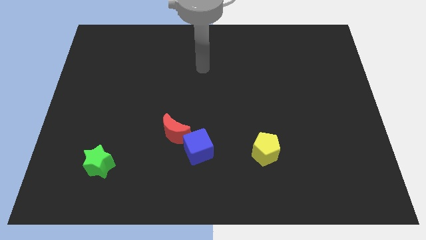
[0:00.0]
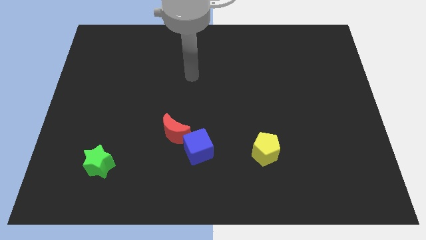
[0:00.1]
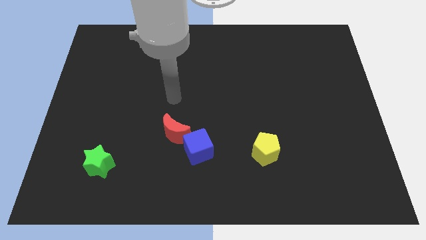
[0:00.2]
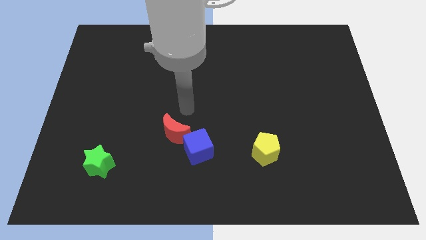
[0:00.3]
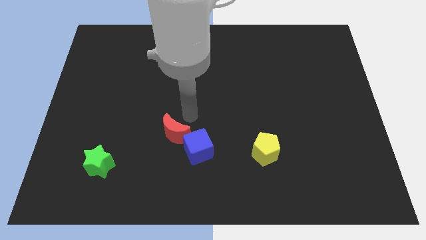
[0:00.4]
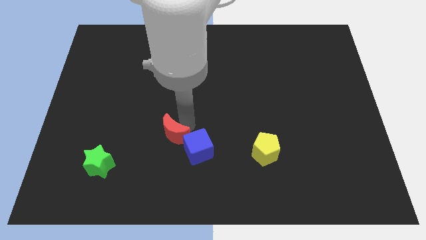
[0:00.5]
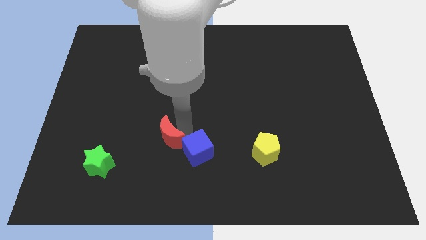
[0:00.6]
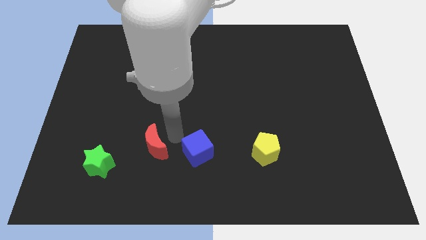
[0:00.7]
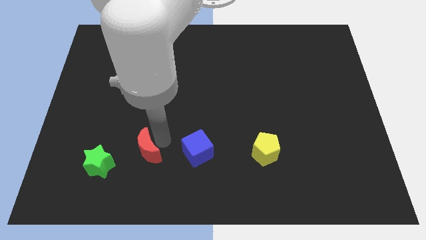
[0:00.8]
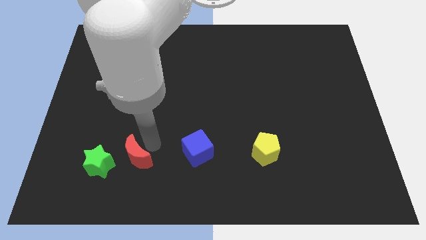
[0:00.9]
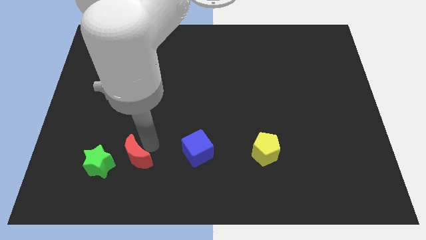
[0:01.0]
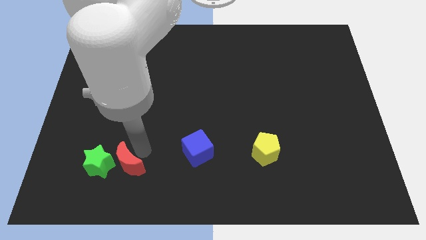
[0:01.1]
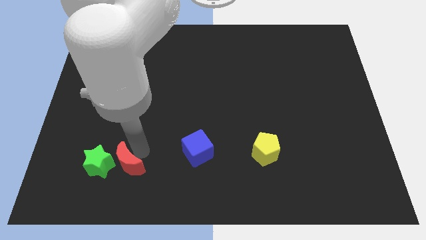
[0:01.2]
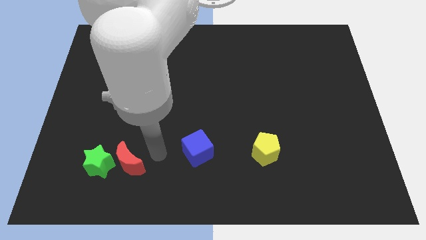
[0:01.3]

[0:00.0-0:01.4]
slide the moon next to the green block

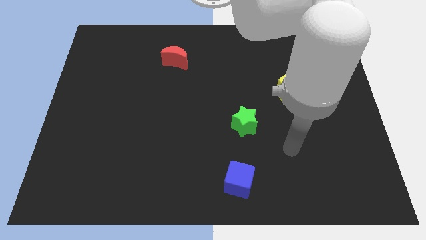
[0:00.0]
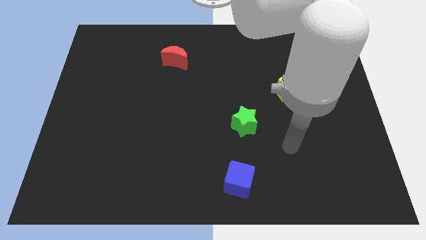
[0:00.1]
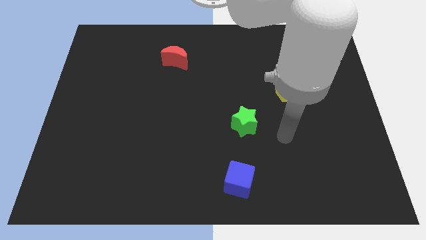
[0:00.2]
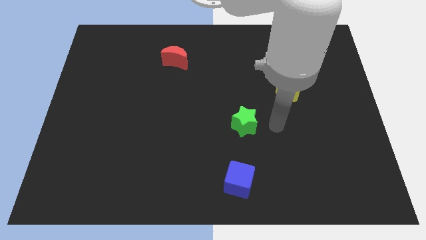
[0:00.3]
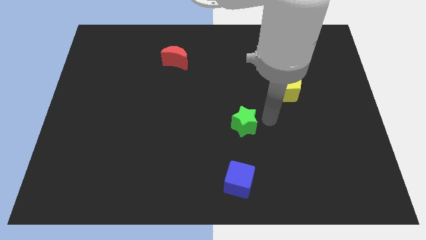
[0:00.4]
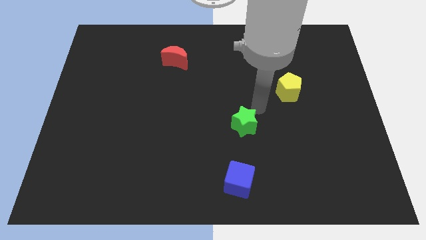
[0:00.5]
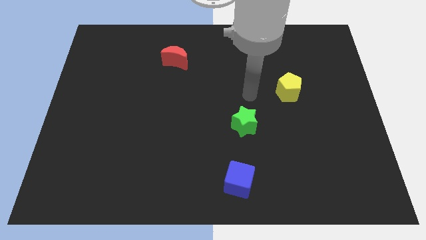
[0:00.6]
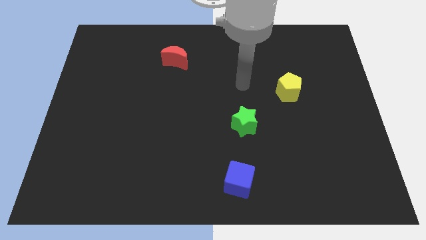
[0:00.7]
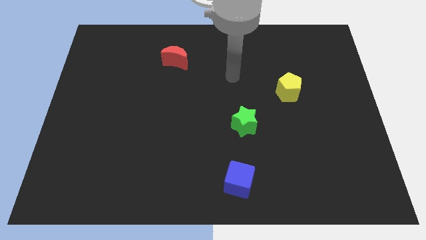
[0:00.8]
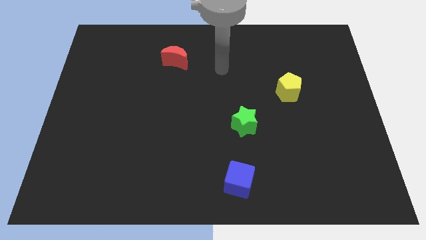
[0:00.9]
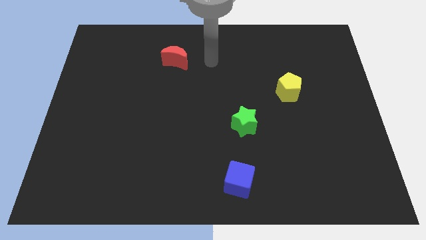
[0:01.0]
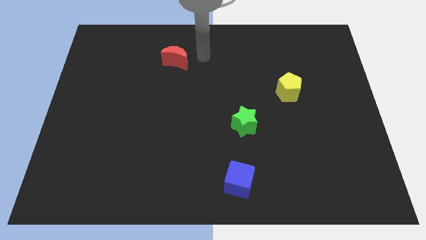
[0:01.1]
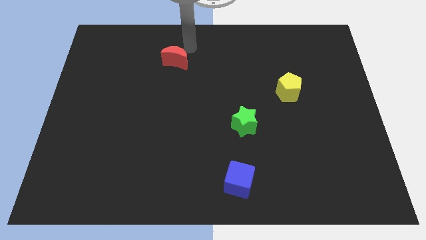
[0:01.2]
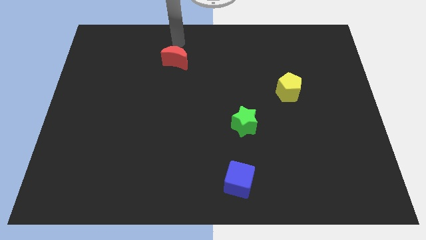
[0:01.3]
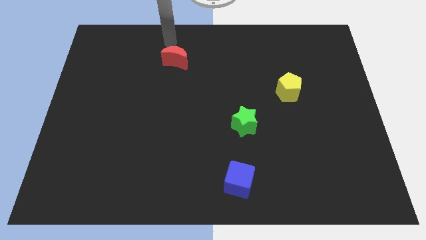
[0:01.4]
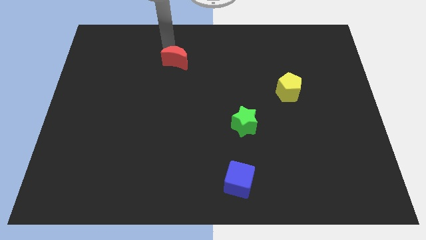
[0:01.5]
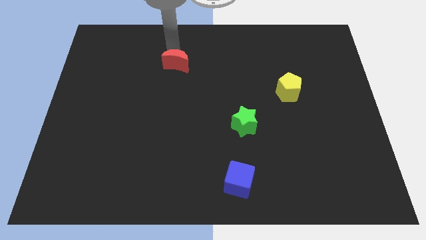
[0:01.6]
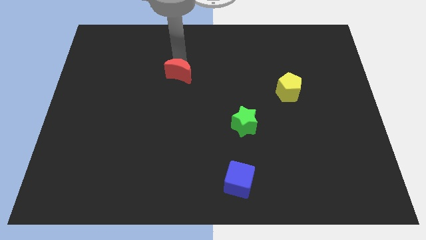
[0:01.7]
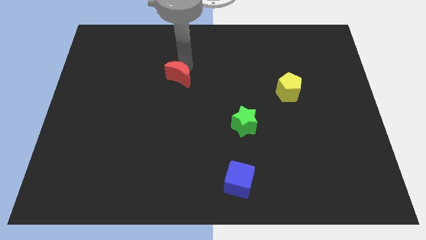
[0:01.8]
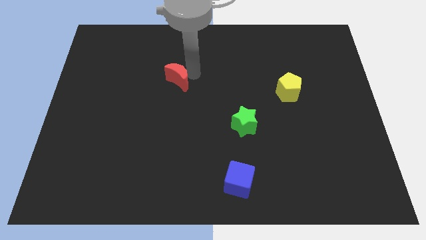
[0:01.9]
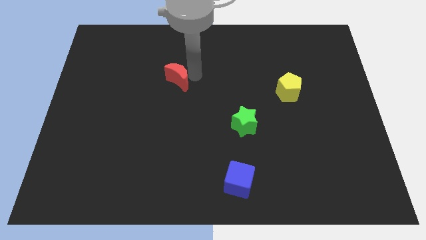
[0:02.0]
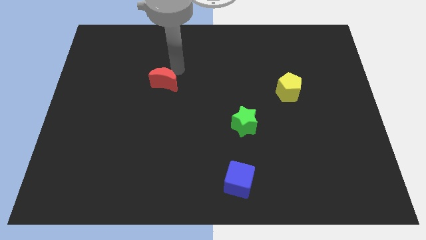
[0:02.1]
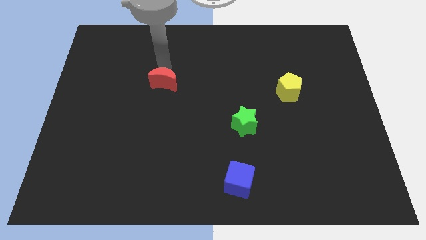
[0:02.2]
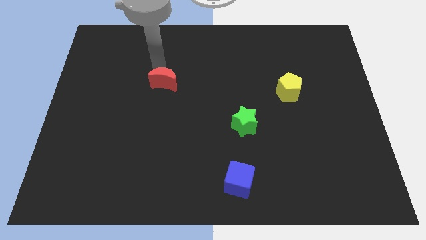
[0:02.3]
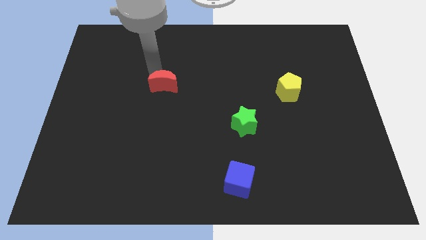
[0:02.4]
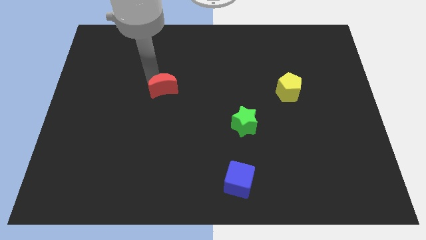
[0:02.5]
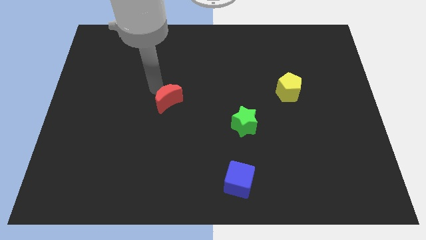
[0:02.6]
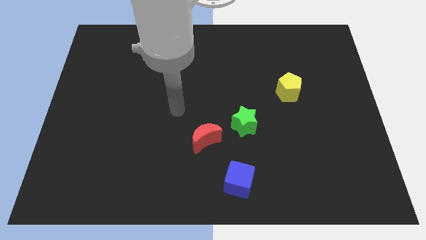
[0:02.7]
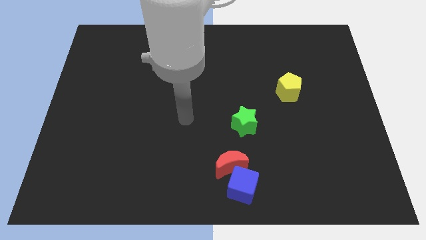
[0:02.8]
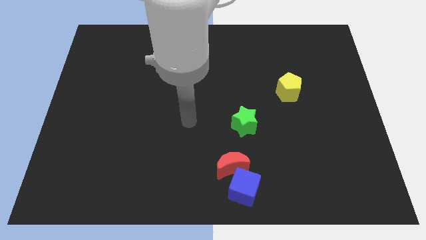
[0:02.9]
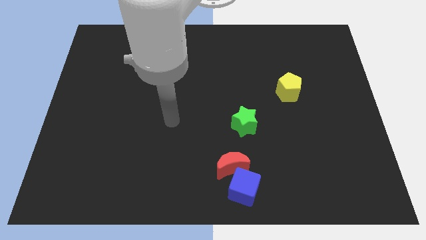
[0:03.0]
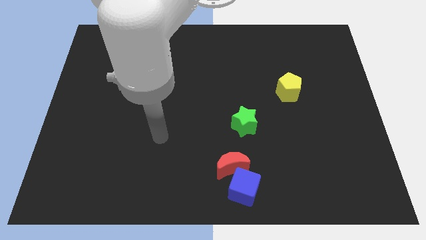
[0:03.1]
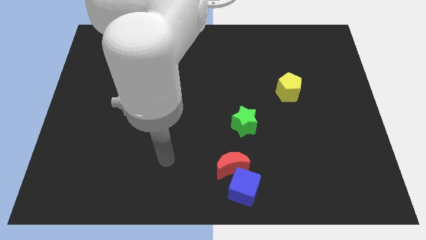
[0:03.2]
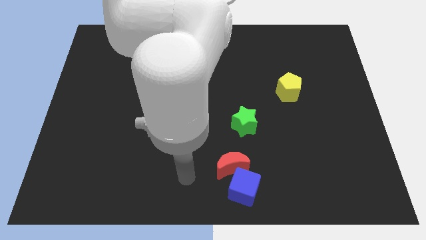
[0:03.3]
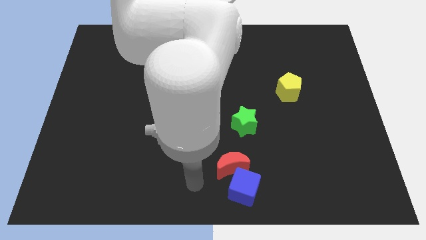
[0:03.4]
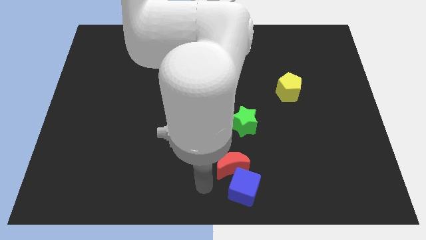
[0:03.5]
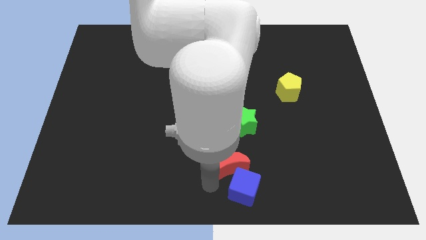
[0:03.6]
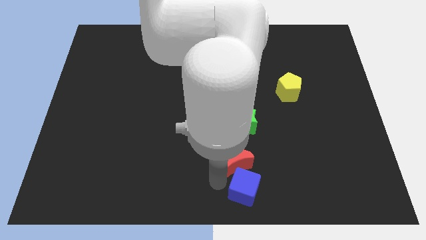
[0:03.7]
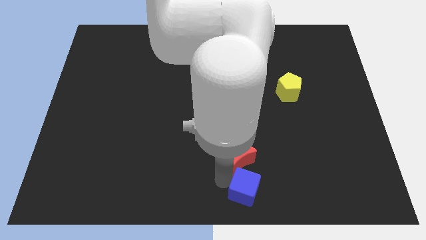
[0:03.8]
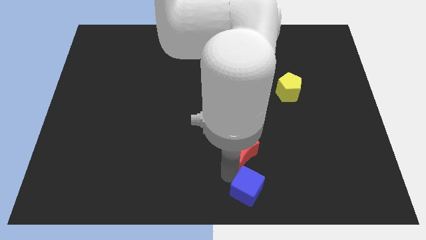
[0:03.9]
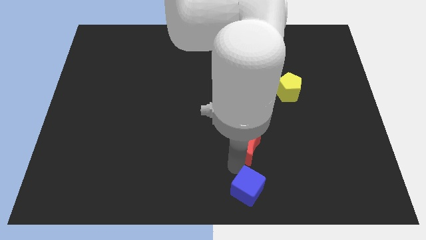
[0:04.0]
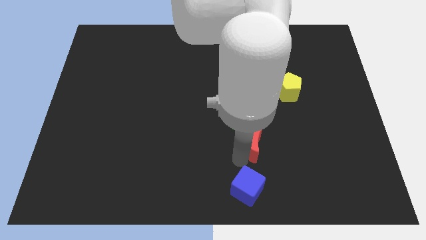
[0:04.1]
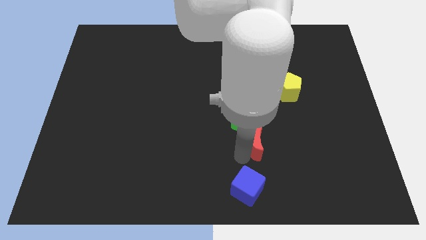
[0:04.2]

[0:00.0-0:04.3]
push the red block towards the green block

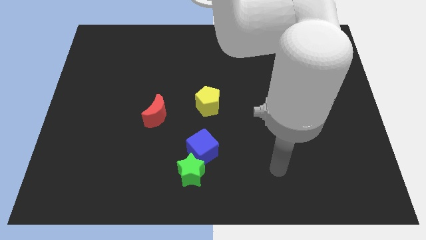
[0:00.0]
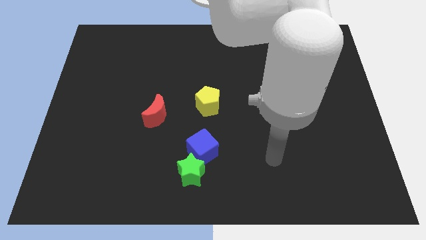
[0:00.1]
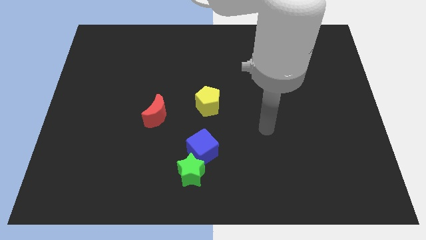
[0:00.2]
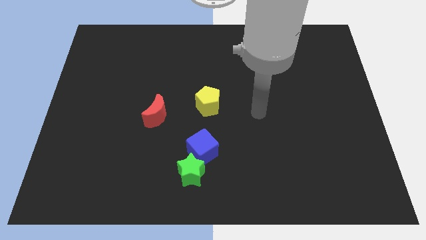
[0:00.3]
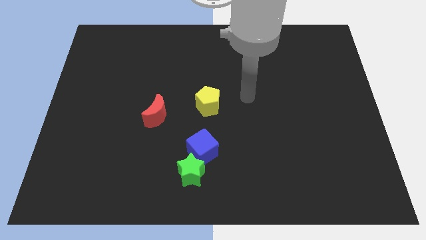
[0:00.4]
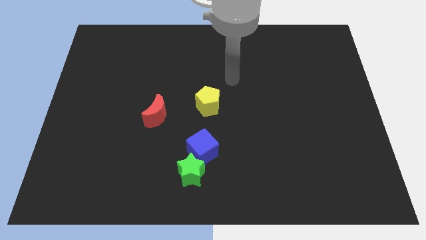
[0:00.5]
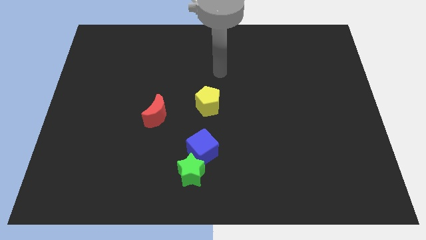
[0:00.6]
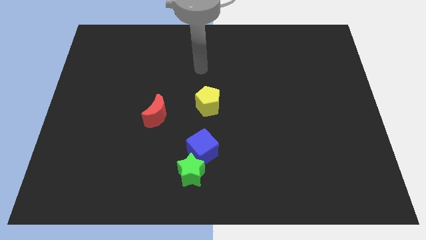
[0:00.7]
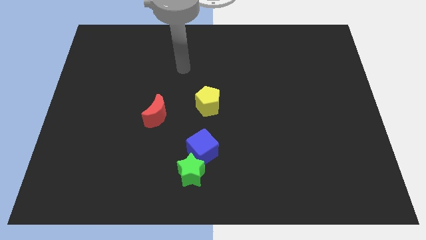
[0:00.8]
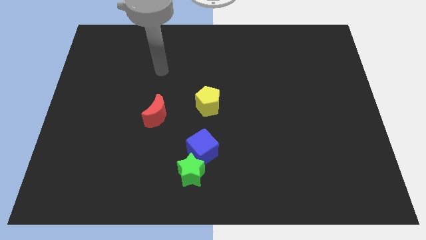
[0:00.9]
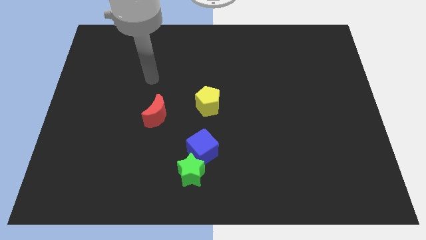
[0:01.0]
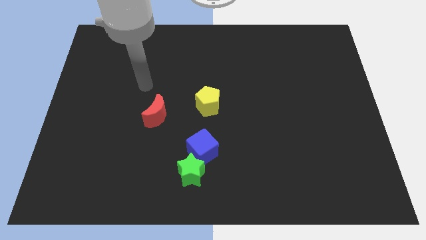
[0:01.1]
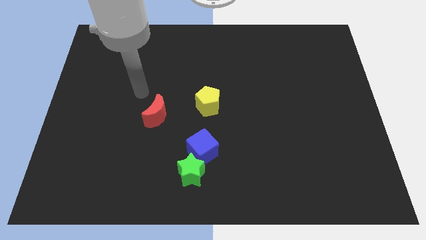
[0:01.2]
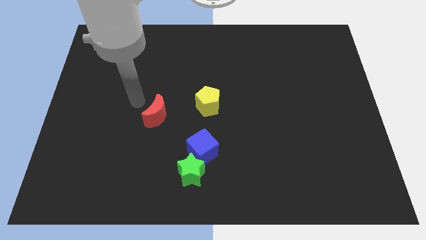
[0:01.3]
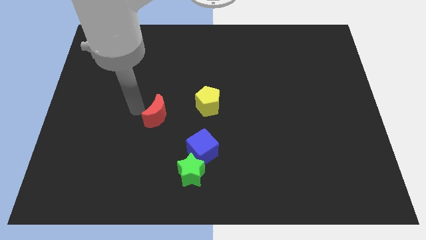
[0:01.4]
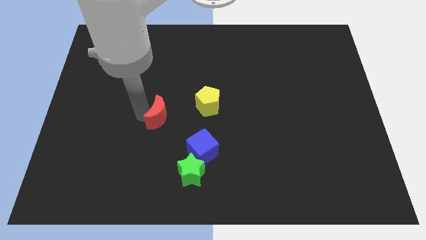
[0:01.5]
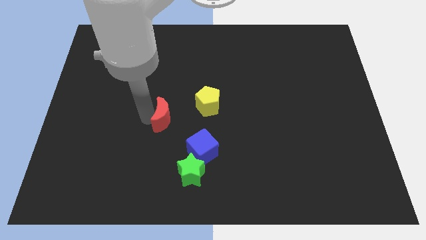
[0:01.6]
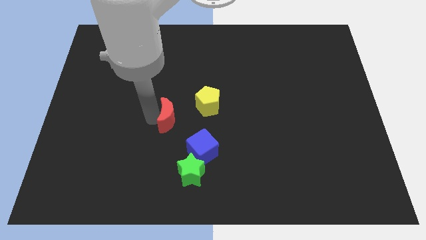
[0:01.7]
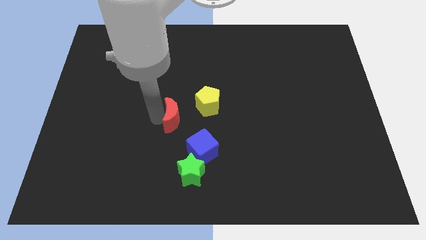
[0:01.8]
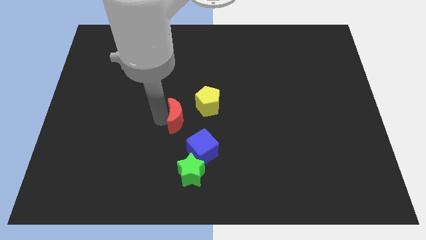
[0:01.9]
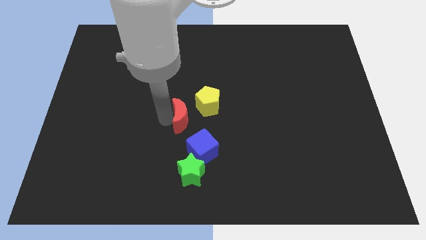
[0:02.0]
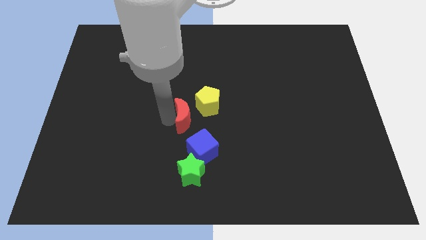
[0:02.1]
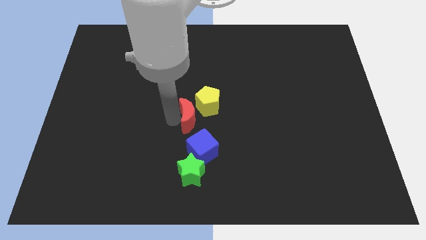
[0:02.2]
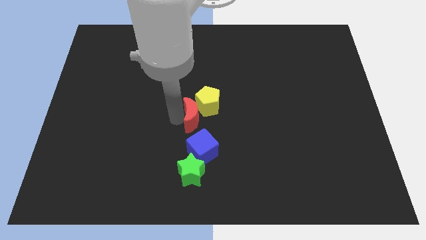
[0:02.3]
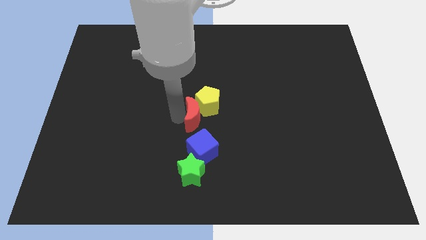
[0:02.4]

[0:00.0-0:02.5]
slide the moon next to the yellow pentagon
